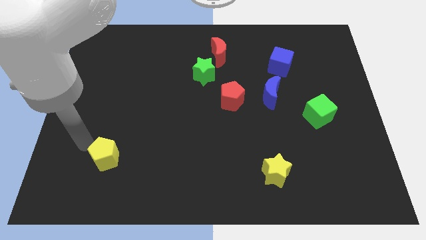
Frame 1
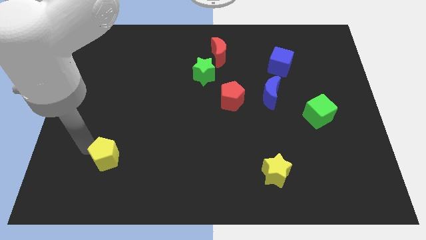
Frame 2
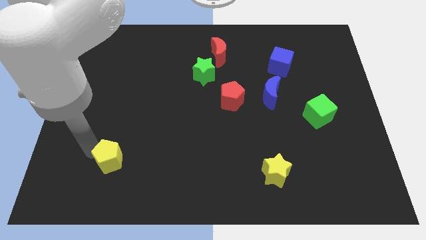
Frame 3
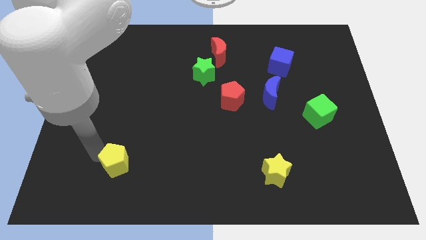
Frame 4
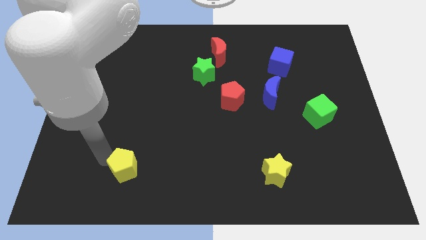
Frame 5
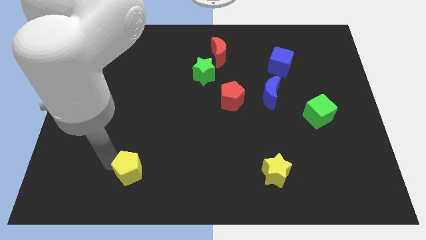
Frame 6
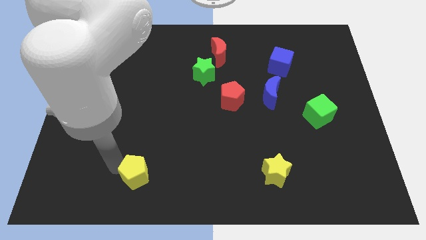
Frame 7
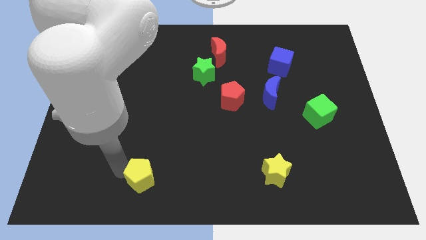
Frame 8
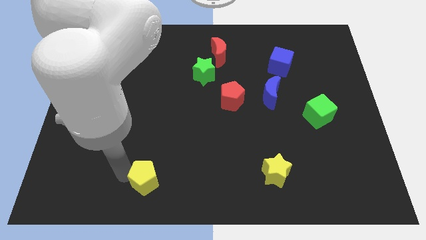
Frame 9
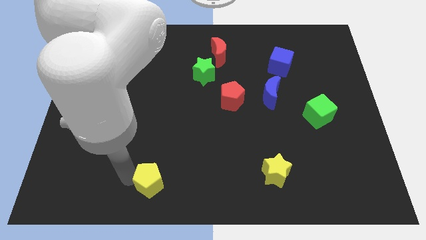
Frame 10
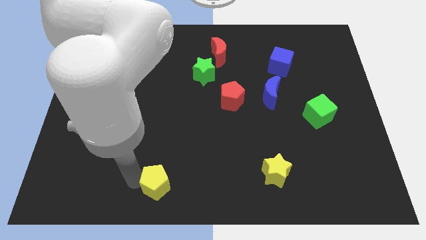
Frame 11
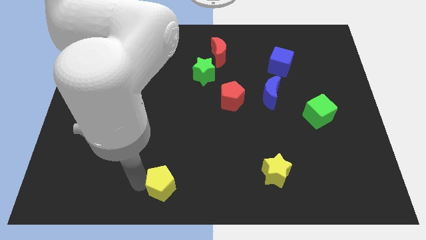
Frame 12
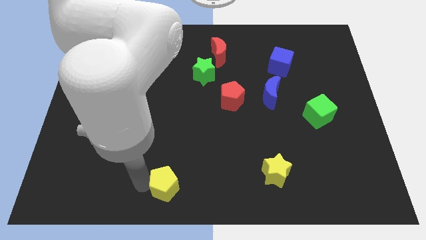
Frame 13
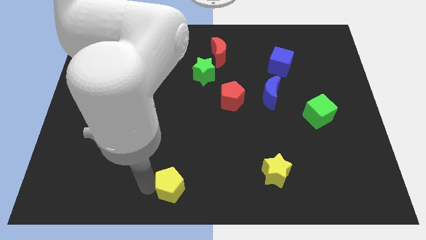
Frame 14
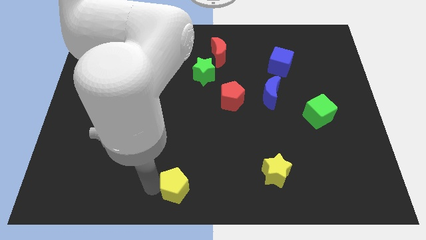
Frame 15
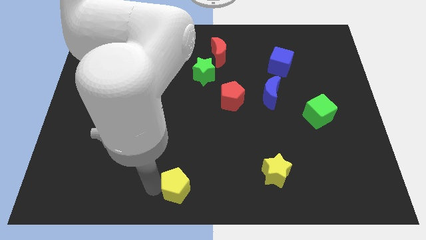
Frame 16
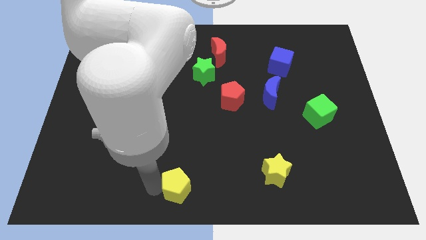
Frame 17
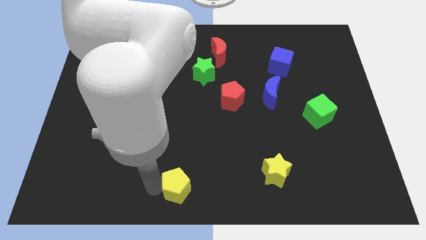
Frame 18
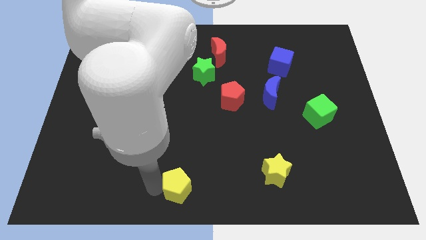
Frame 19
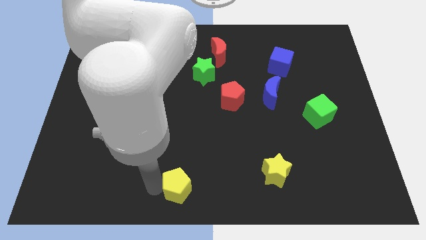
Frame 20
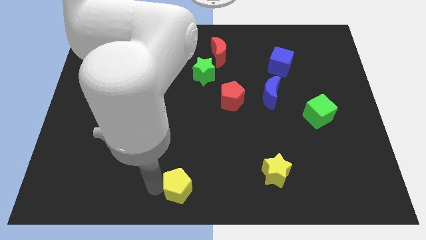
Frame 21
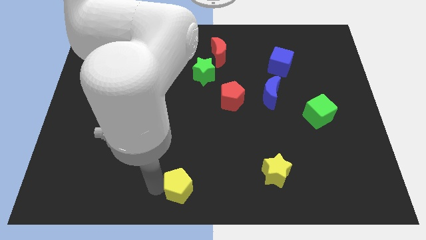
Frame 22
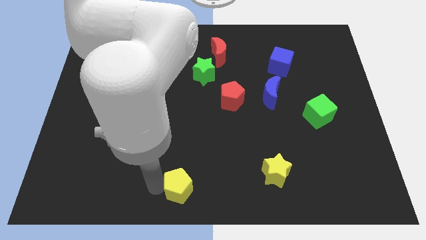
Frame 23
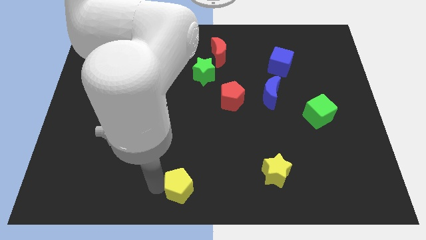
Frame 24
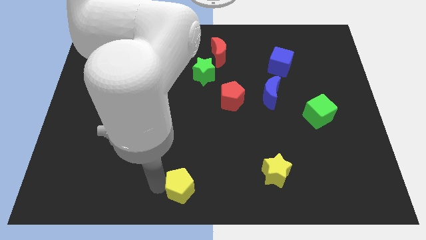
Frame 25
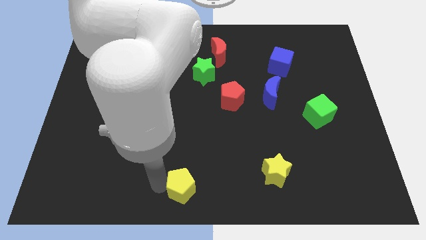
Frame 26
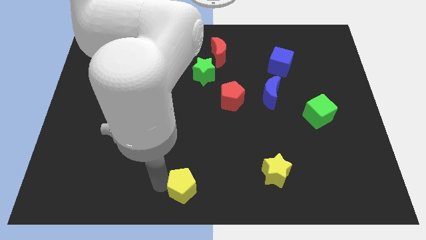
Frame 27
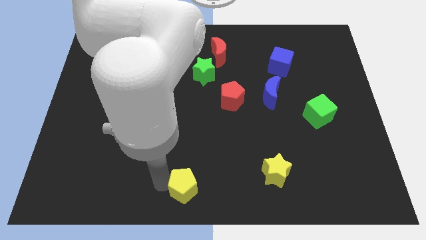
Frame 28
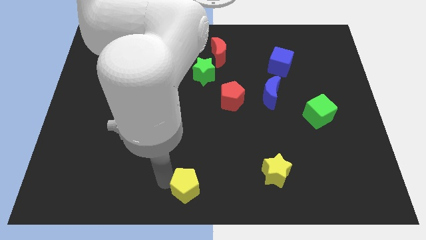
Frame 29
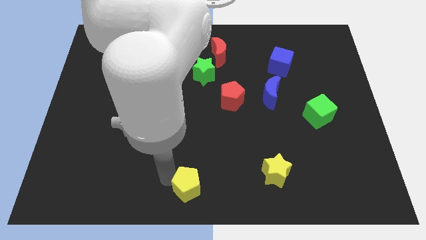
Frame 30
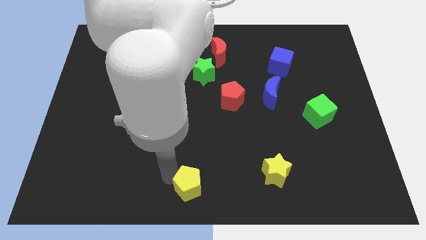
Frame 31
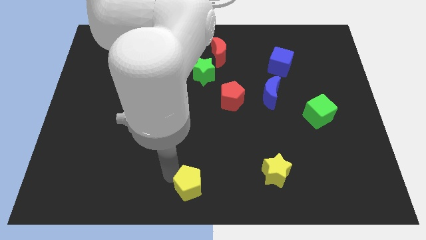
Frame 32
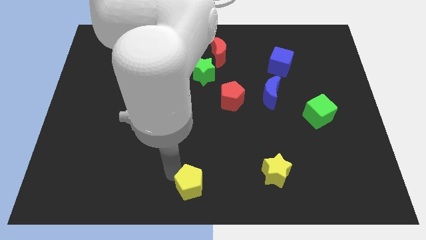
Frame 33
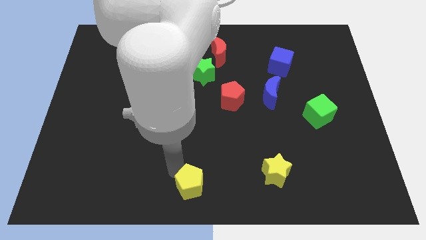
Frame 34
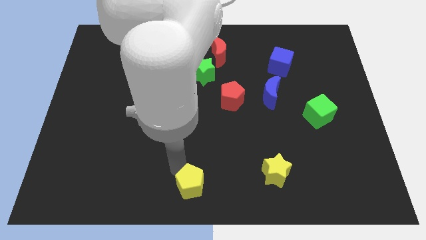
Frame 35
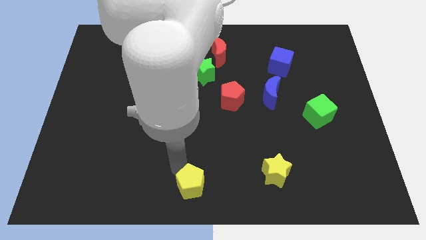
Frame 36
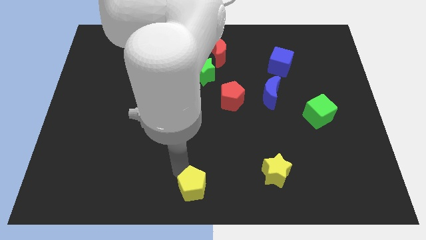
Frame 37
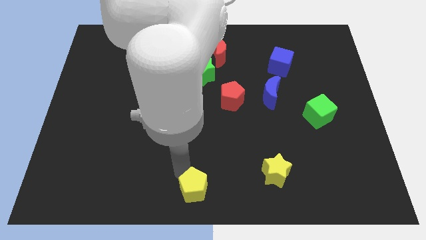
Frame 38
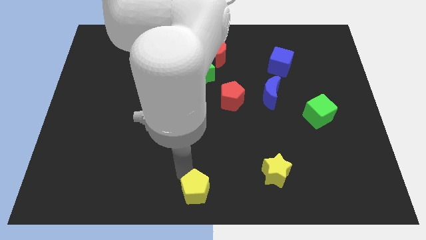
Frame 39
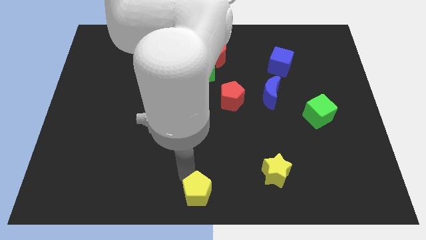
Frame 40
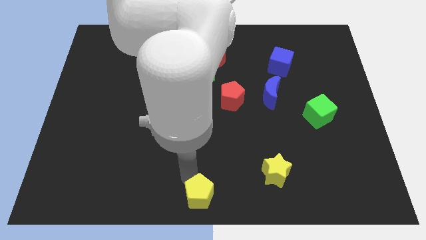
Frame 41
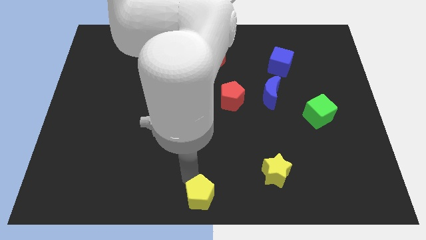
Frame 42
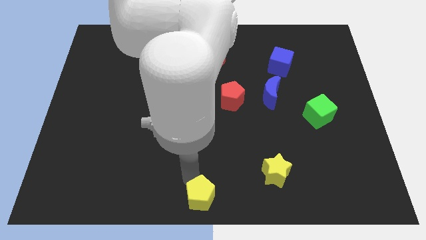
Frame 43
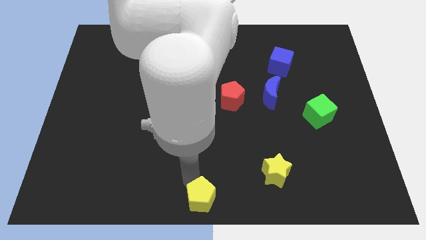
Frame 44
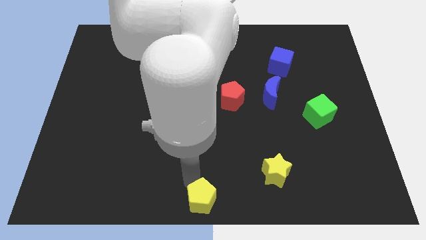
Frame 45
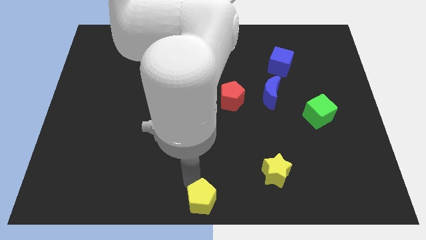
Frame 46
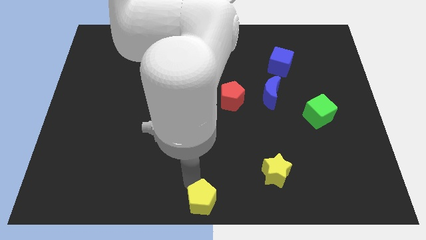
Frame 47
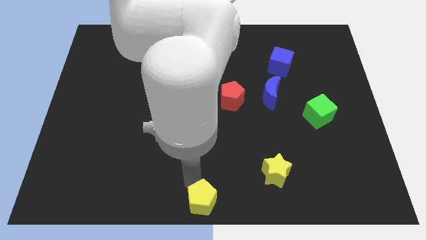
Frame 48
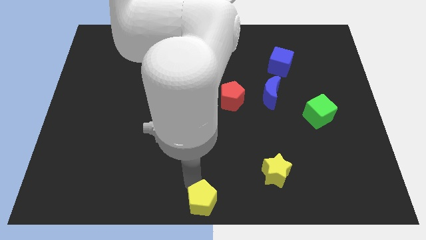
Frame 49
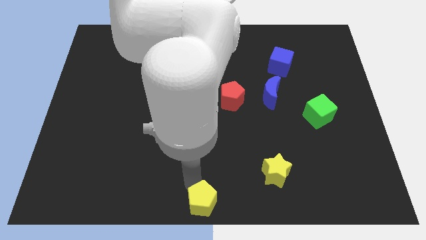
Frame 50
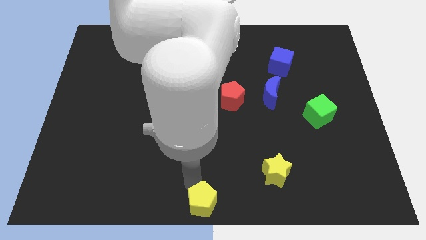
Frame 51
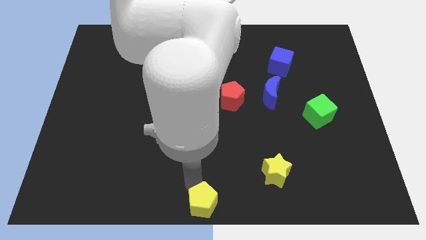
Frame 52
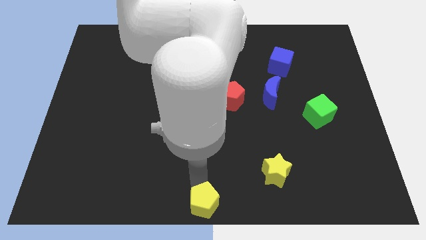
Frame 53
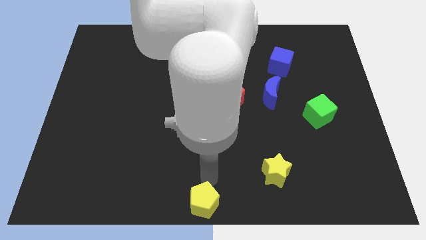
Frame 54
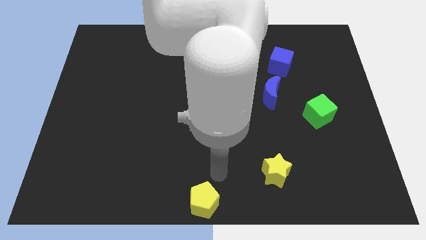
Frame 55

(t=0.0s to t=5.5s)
move the yellow pentagon to the bottom centre of the board

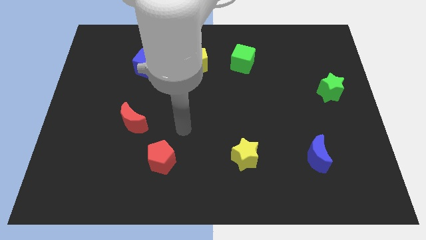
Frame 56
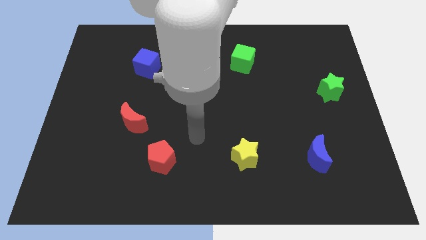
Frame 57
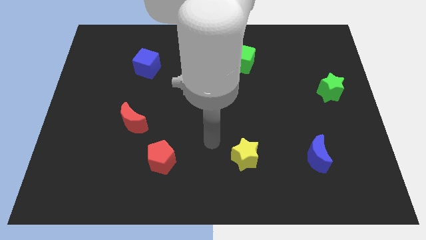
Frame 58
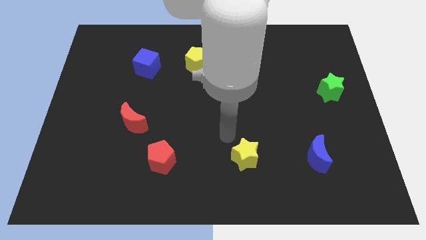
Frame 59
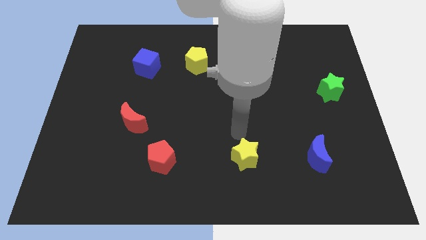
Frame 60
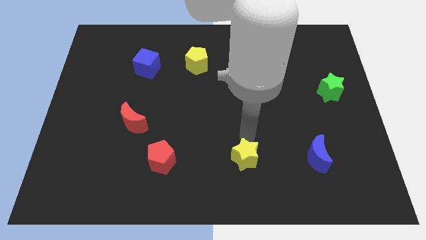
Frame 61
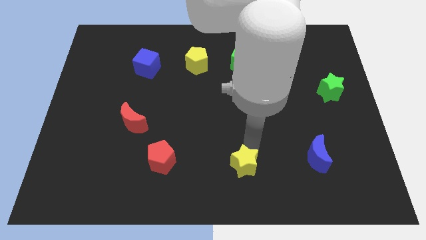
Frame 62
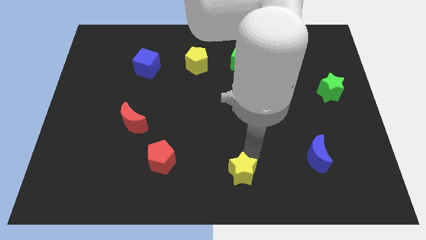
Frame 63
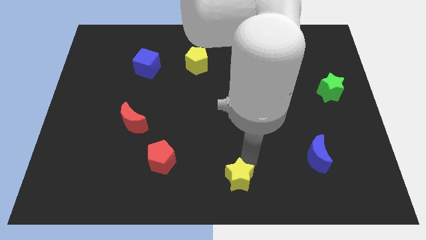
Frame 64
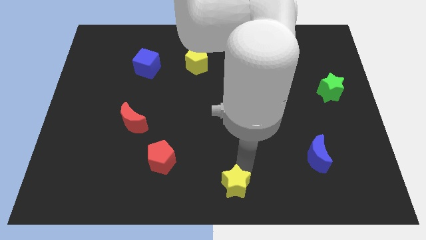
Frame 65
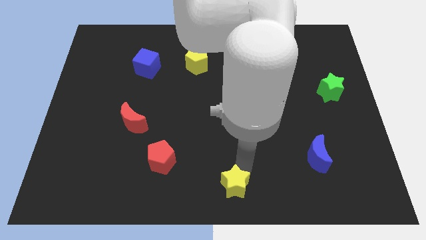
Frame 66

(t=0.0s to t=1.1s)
move the yellow star to the bottom center of the board

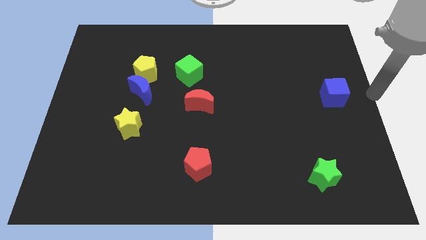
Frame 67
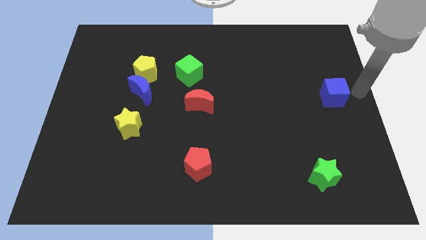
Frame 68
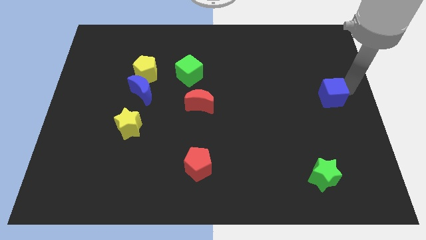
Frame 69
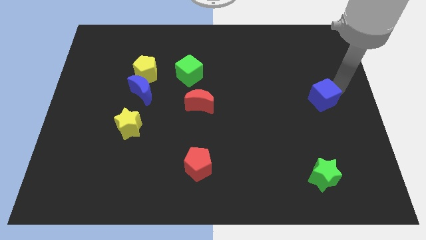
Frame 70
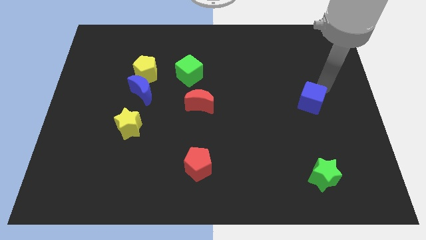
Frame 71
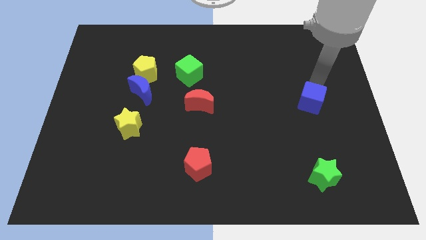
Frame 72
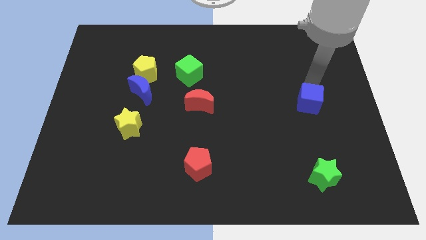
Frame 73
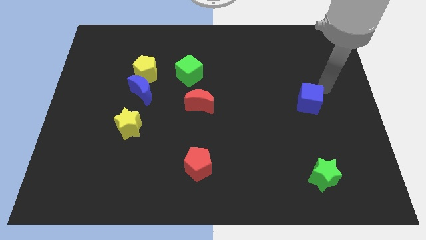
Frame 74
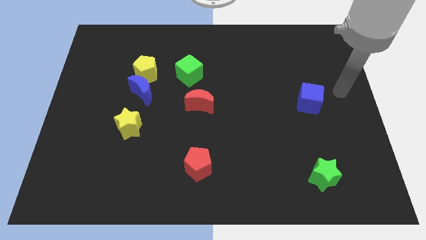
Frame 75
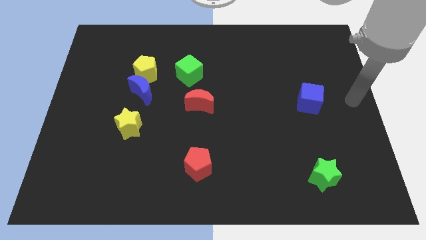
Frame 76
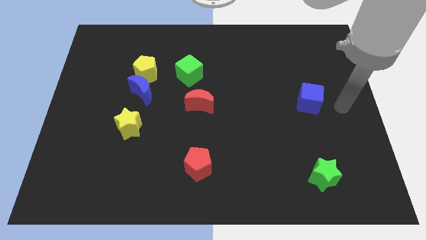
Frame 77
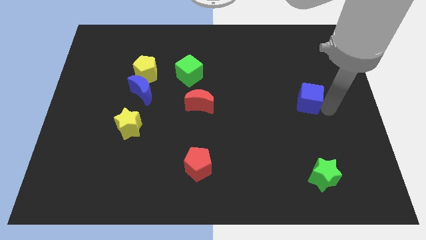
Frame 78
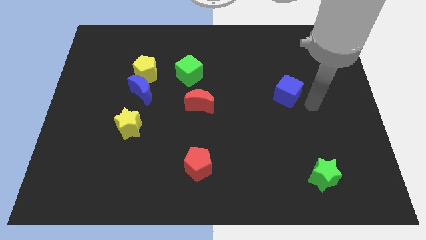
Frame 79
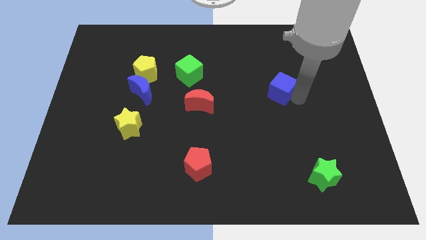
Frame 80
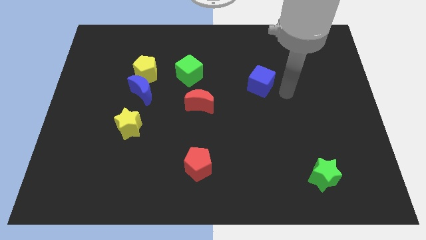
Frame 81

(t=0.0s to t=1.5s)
move the blue cube diagonally to the green star

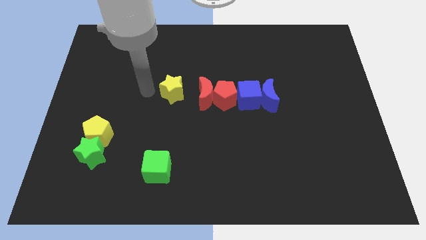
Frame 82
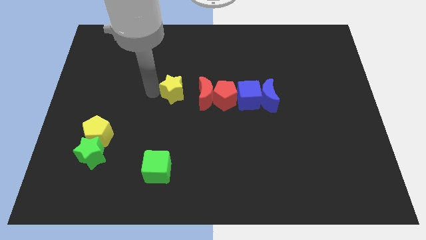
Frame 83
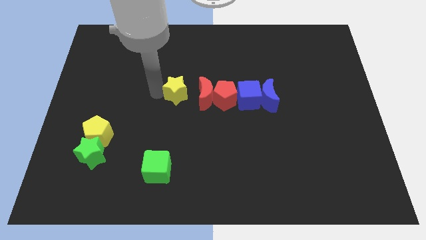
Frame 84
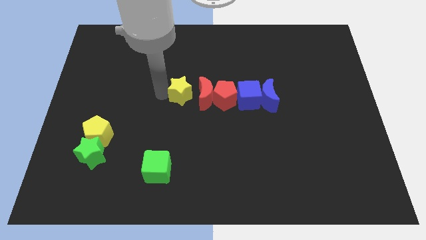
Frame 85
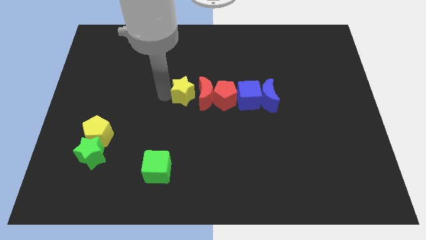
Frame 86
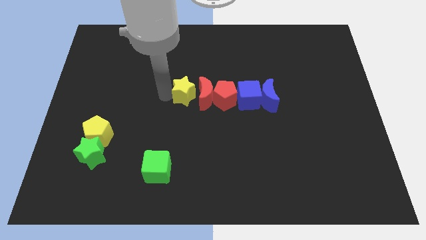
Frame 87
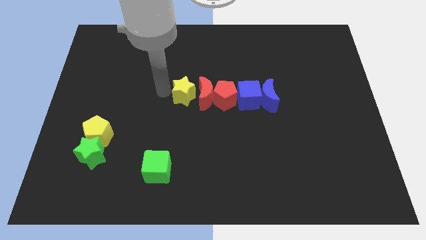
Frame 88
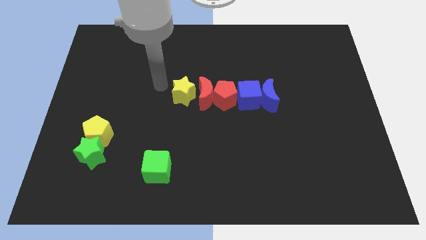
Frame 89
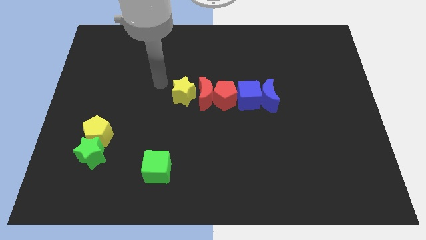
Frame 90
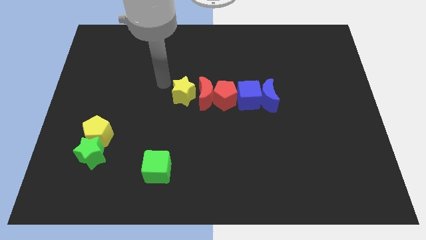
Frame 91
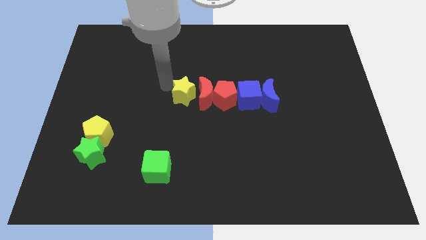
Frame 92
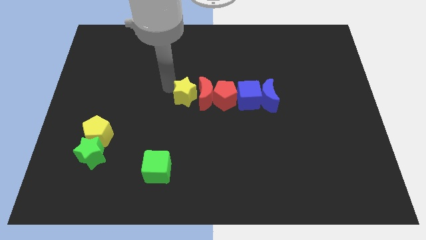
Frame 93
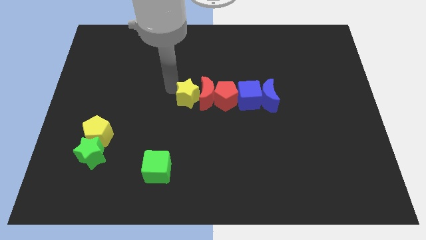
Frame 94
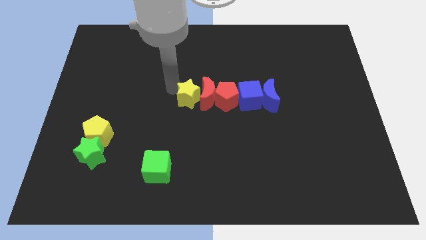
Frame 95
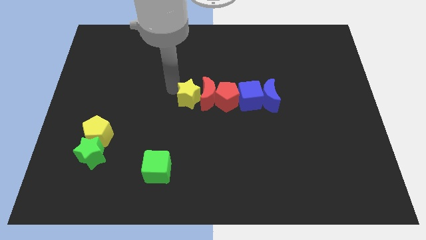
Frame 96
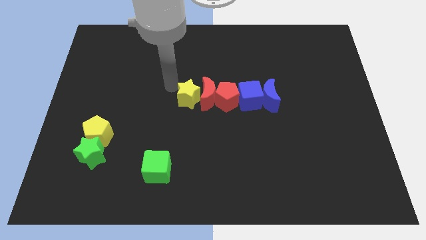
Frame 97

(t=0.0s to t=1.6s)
move the yellow star into the red moon
